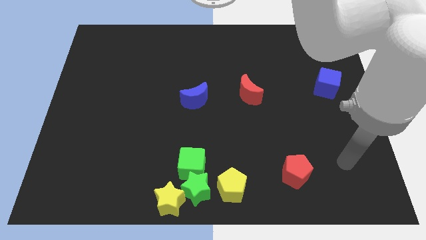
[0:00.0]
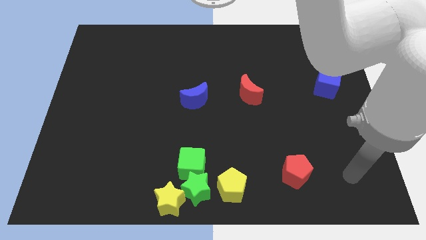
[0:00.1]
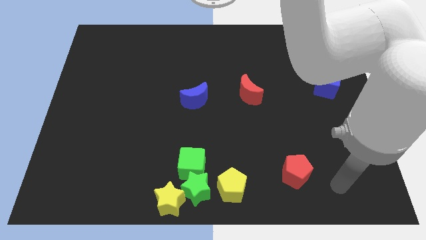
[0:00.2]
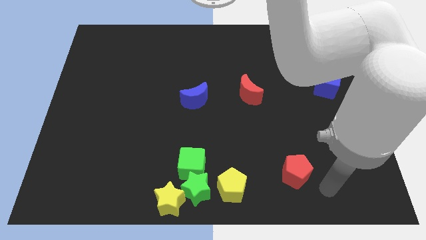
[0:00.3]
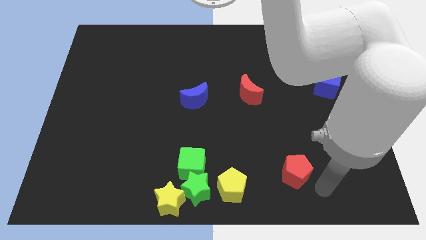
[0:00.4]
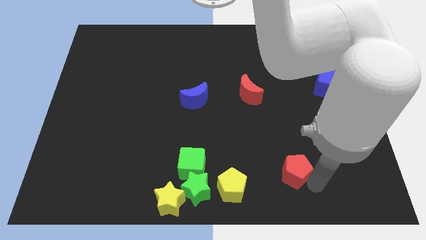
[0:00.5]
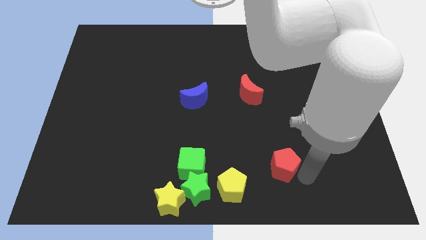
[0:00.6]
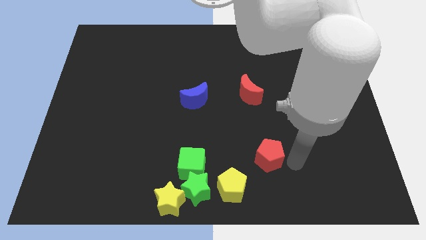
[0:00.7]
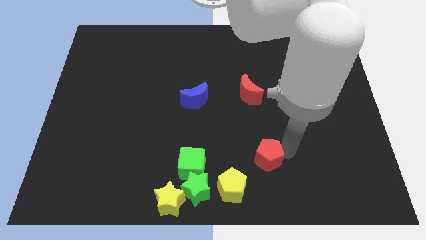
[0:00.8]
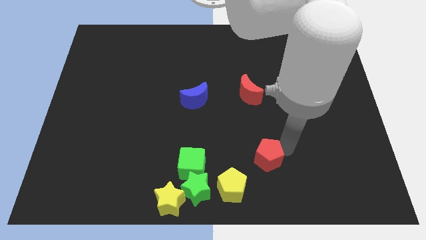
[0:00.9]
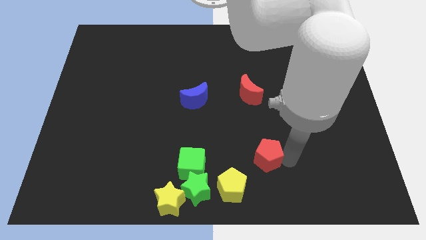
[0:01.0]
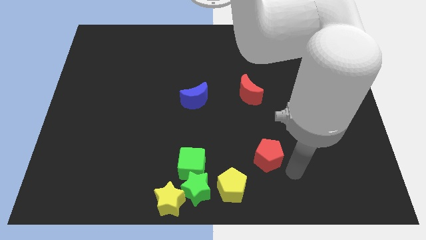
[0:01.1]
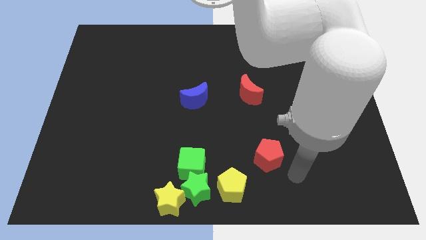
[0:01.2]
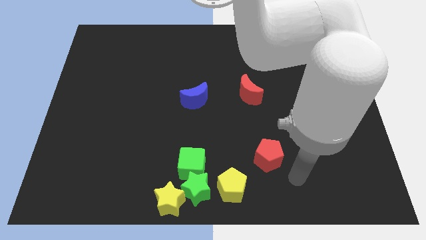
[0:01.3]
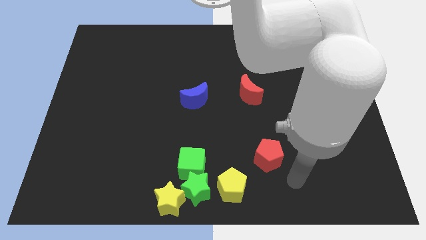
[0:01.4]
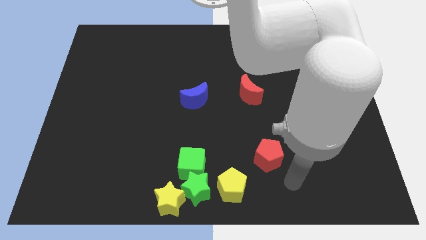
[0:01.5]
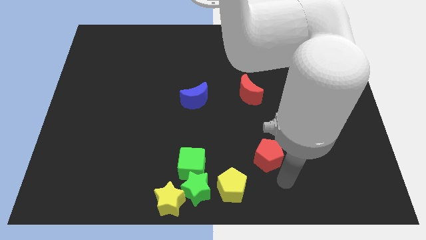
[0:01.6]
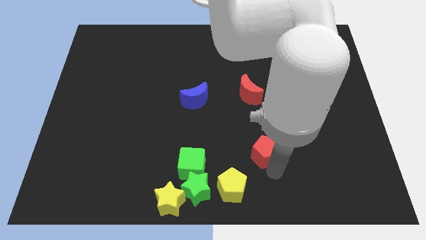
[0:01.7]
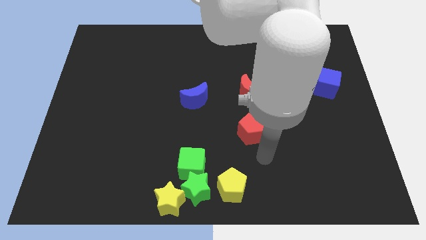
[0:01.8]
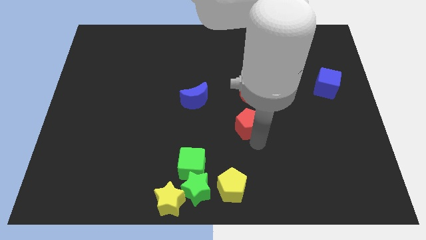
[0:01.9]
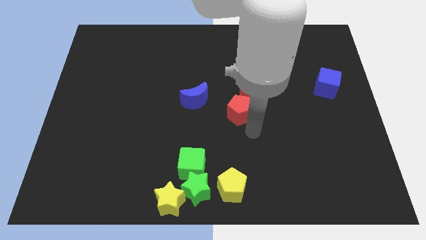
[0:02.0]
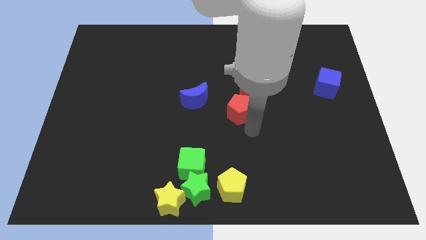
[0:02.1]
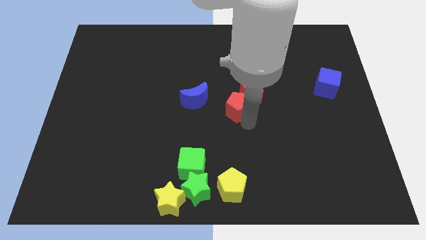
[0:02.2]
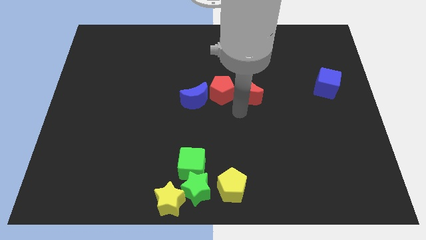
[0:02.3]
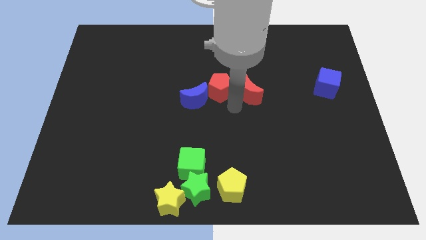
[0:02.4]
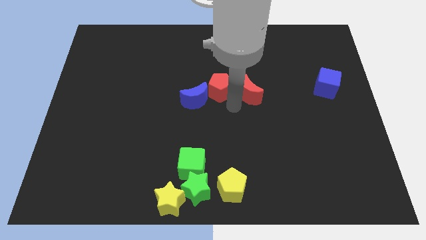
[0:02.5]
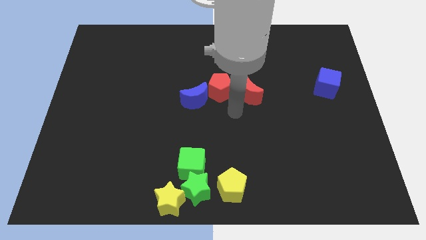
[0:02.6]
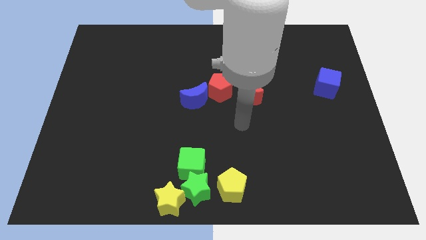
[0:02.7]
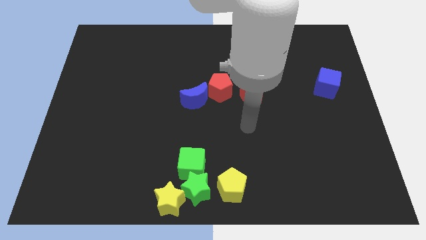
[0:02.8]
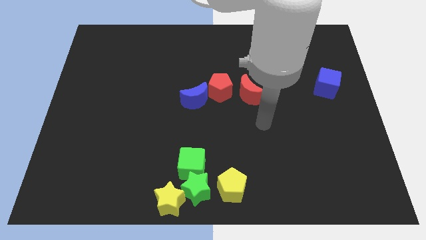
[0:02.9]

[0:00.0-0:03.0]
place the red pentagon to the left of red crescent

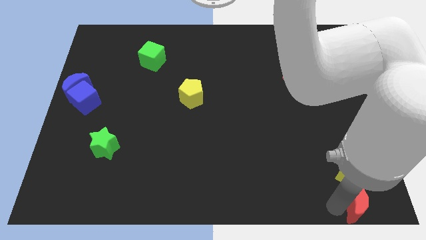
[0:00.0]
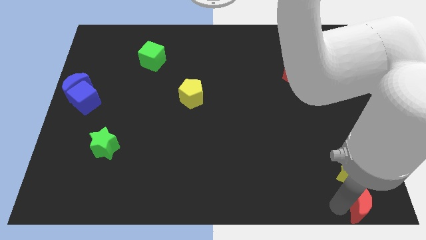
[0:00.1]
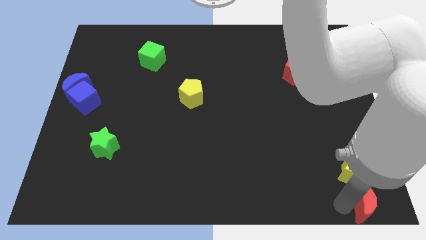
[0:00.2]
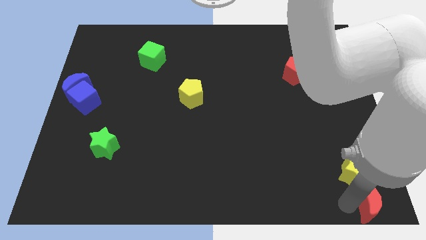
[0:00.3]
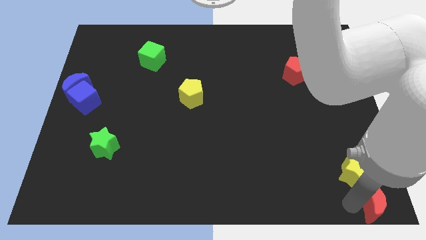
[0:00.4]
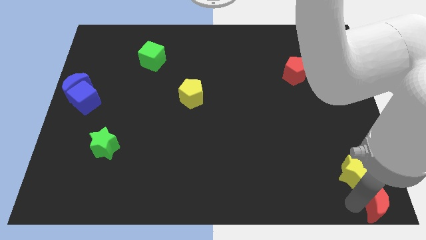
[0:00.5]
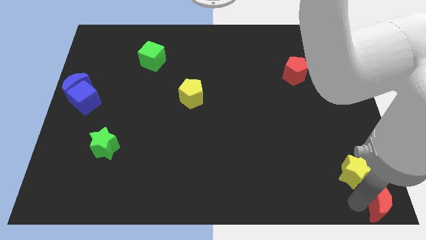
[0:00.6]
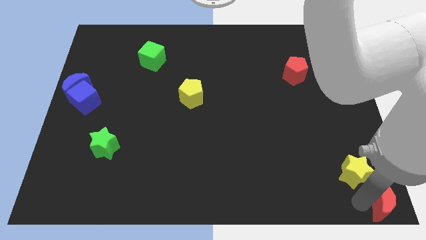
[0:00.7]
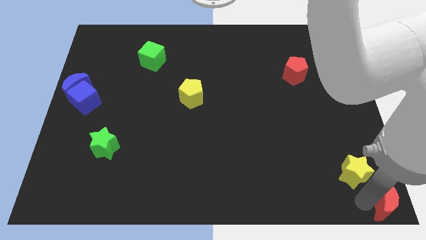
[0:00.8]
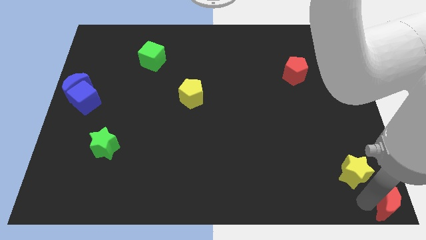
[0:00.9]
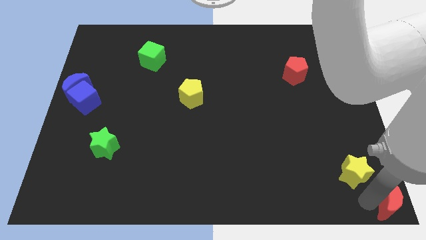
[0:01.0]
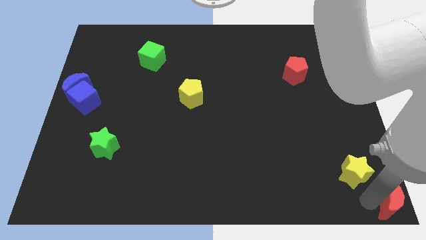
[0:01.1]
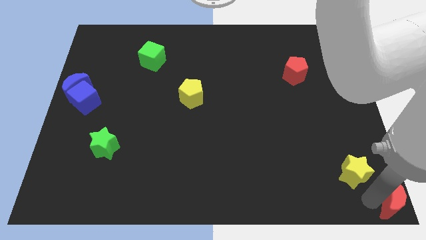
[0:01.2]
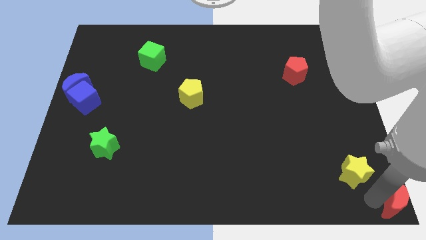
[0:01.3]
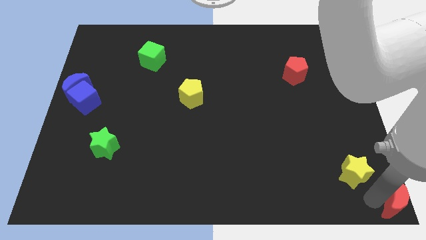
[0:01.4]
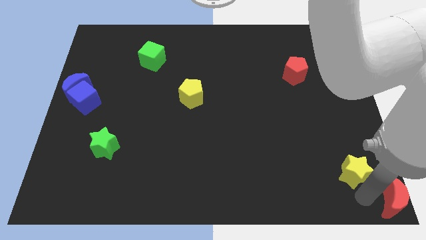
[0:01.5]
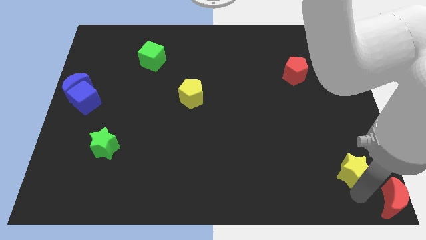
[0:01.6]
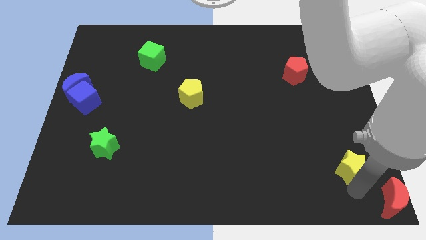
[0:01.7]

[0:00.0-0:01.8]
push the red moon to the bottom right corner

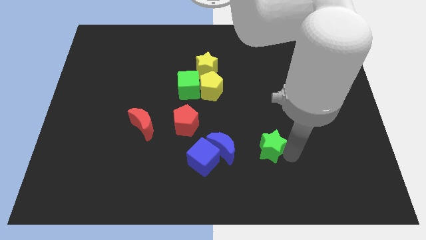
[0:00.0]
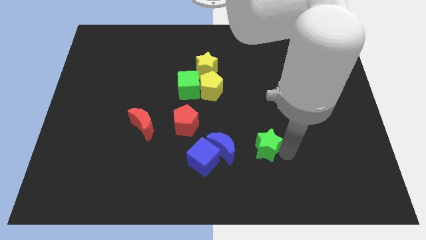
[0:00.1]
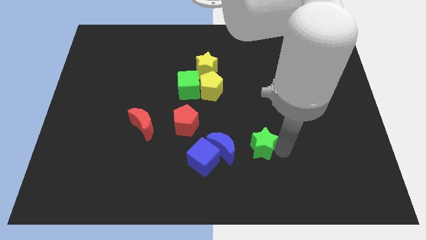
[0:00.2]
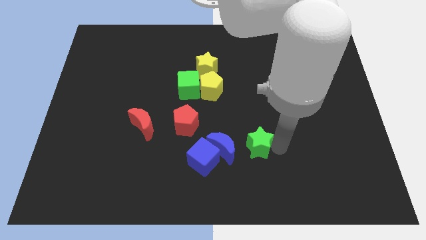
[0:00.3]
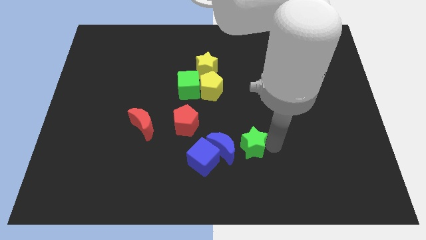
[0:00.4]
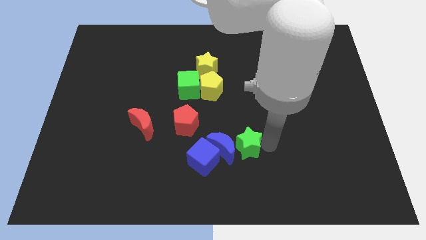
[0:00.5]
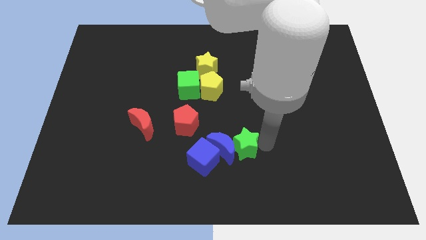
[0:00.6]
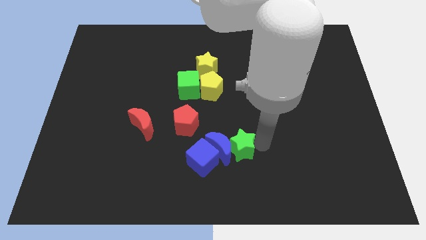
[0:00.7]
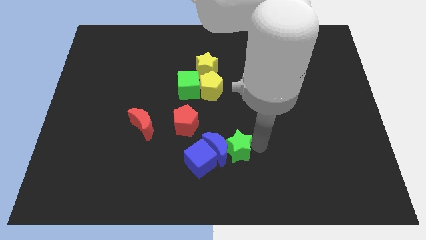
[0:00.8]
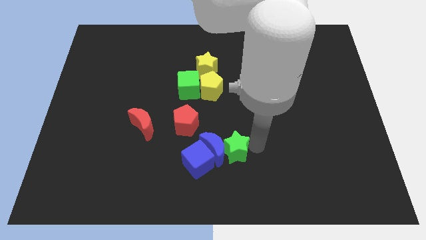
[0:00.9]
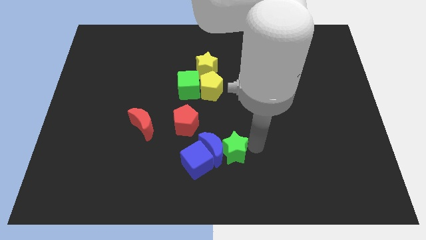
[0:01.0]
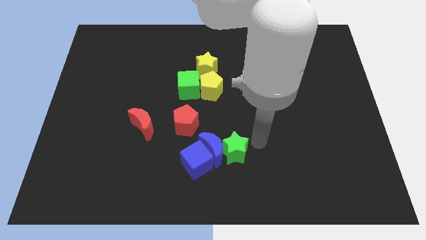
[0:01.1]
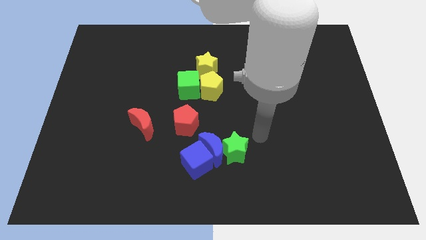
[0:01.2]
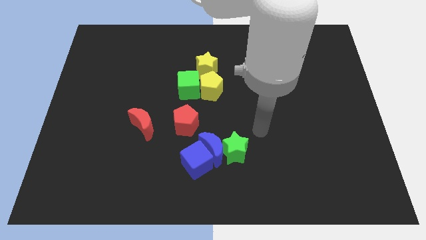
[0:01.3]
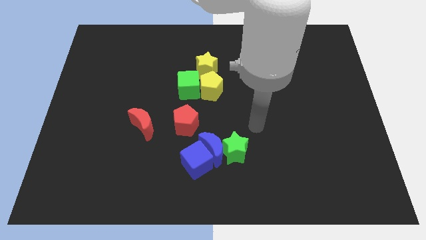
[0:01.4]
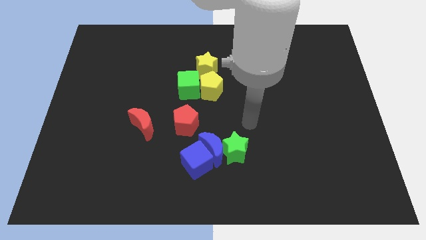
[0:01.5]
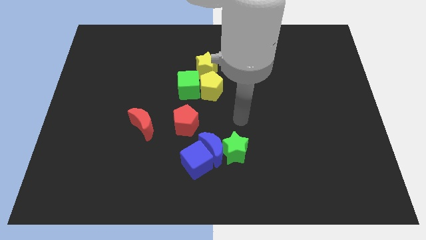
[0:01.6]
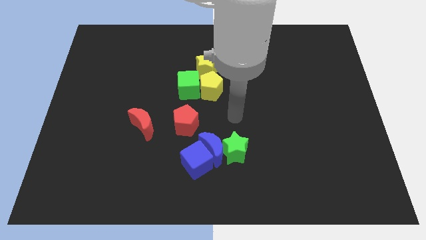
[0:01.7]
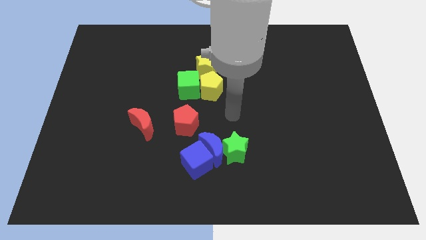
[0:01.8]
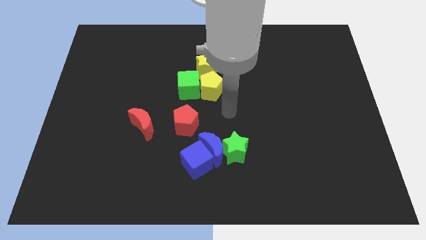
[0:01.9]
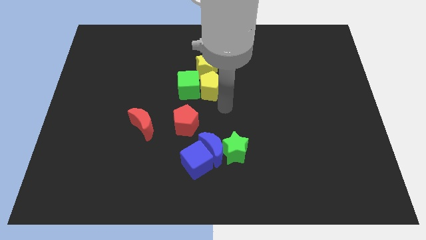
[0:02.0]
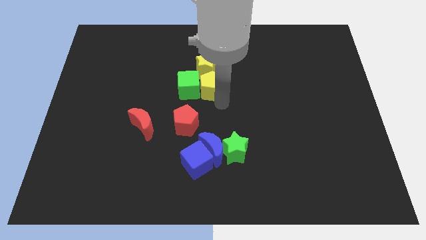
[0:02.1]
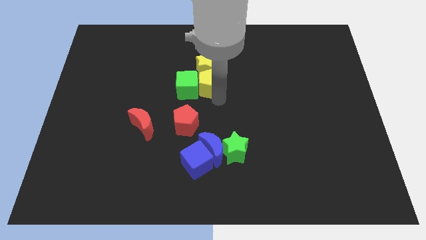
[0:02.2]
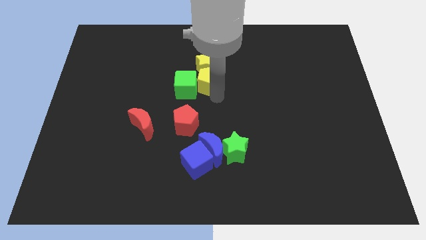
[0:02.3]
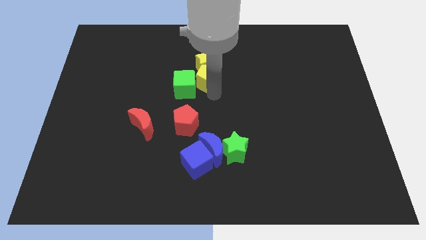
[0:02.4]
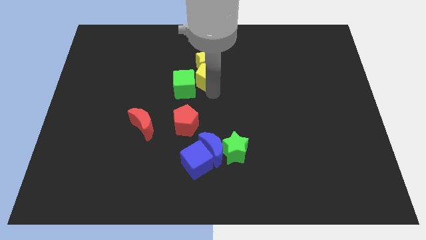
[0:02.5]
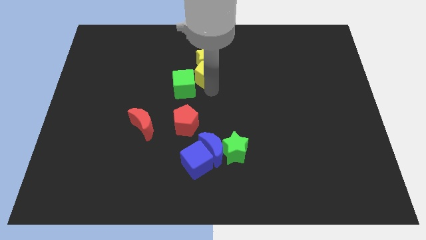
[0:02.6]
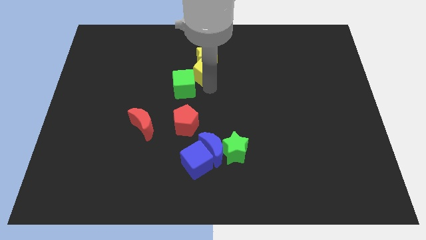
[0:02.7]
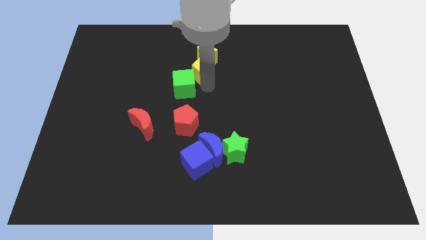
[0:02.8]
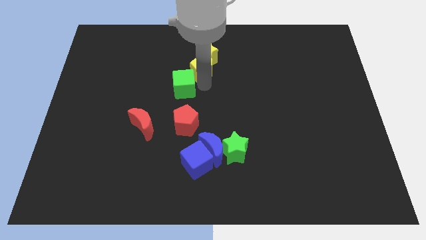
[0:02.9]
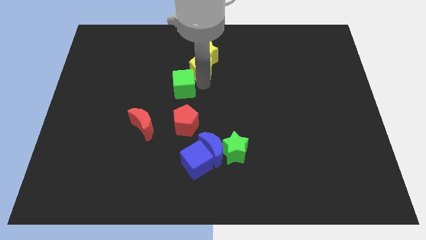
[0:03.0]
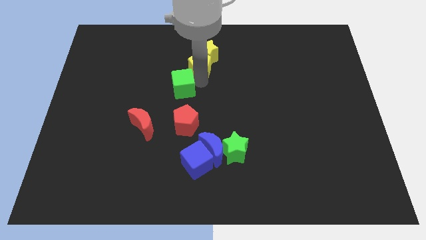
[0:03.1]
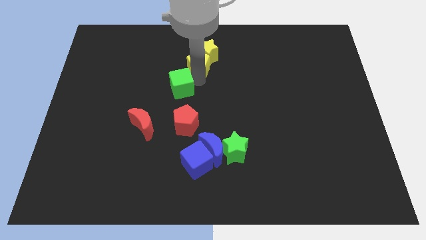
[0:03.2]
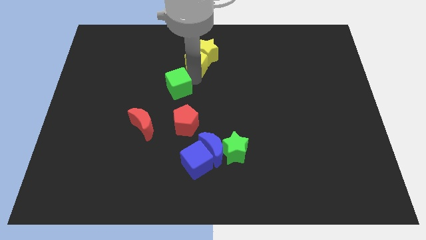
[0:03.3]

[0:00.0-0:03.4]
slide the green star into the blue blocks

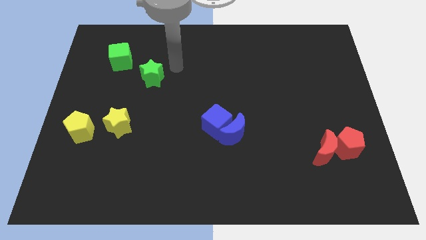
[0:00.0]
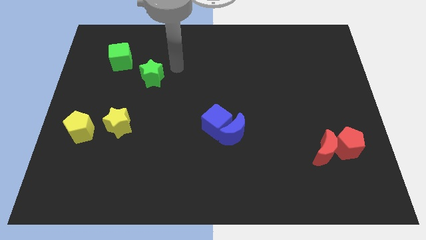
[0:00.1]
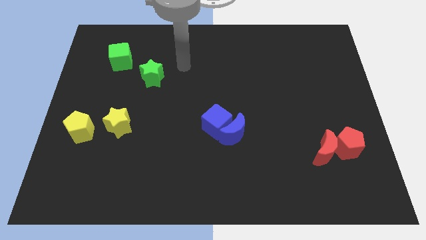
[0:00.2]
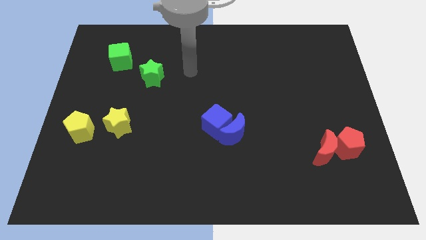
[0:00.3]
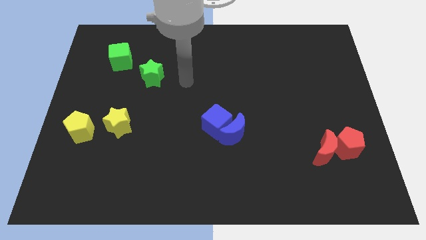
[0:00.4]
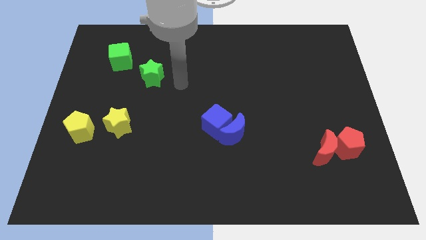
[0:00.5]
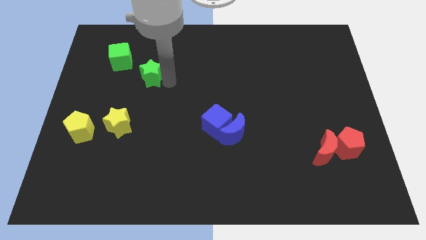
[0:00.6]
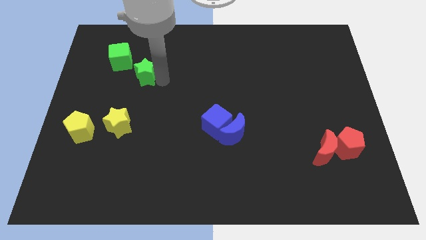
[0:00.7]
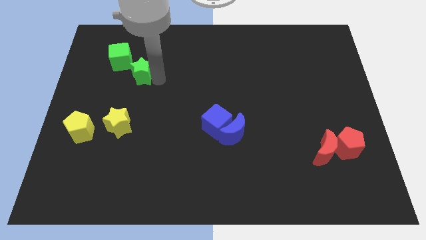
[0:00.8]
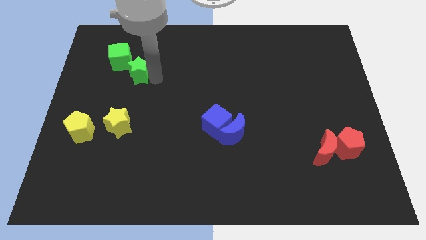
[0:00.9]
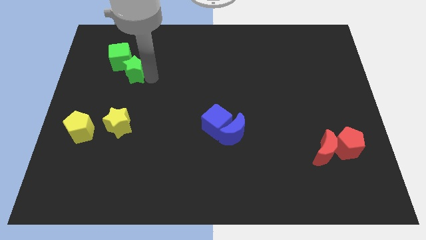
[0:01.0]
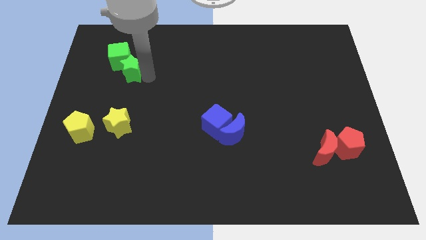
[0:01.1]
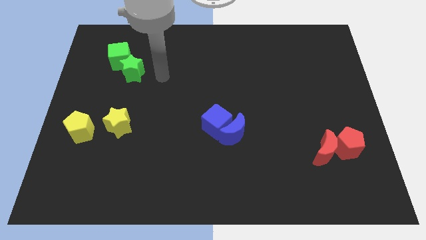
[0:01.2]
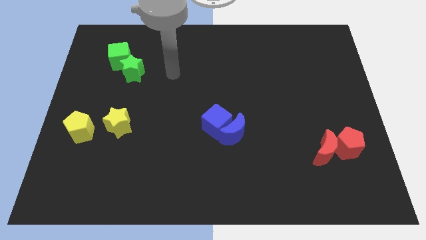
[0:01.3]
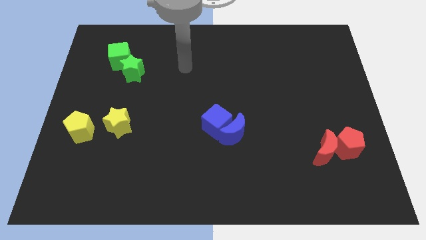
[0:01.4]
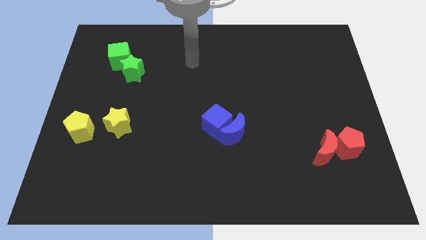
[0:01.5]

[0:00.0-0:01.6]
push the green star into the green cube
